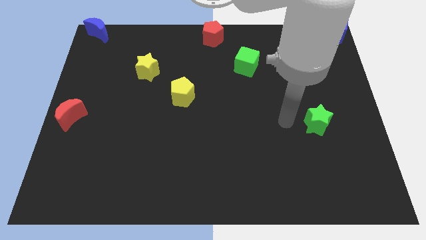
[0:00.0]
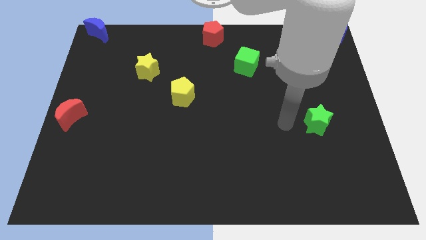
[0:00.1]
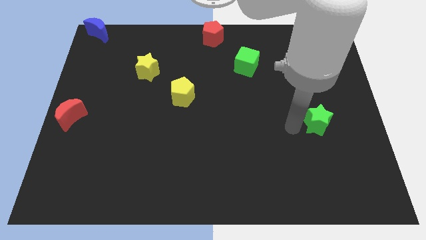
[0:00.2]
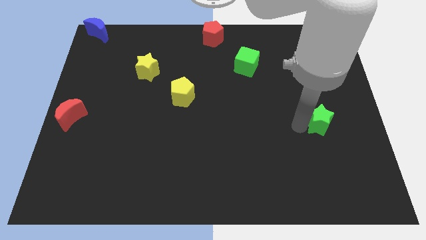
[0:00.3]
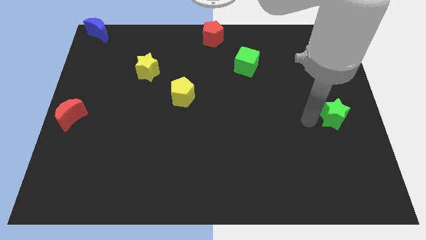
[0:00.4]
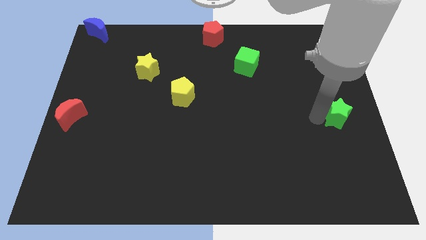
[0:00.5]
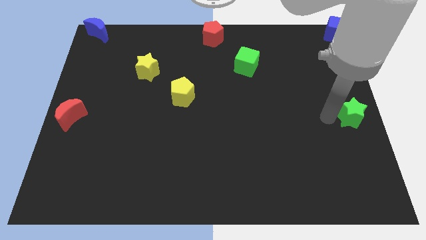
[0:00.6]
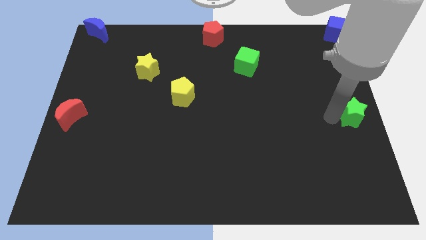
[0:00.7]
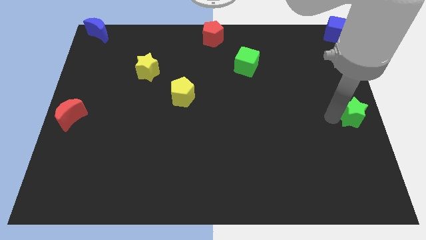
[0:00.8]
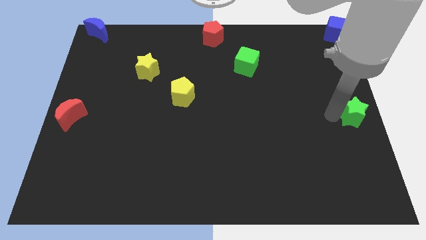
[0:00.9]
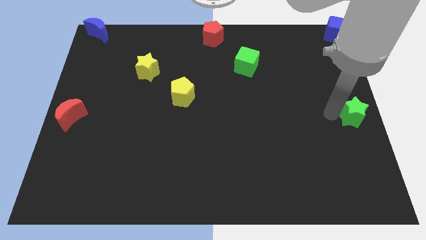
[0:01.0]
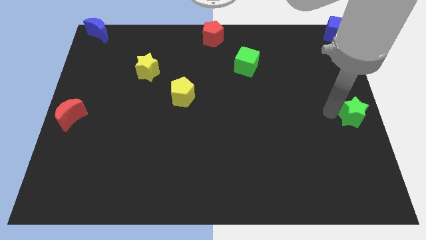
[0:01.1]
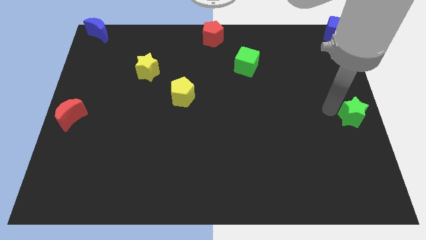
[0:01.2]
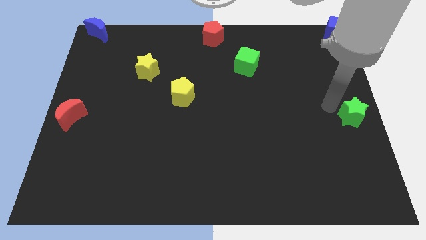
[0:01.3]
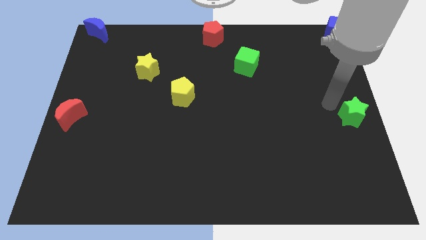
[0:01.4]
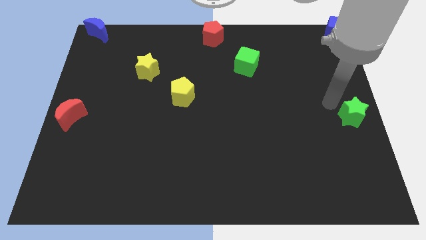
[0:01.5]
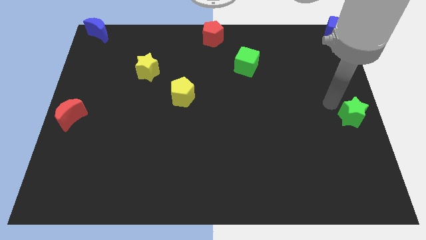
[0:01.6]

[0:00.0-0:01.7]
place the green star to the center right of the board

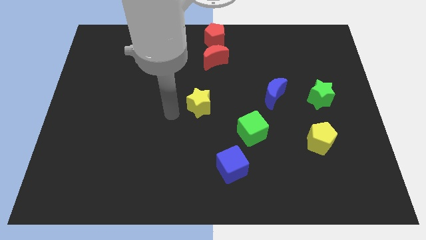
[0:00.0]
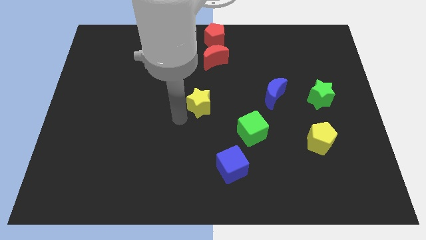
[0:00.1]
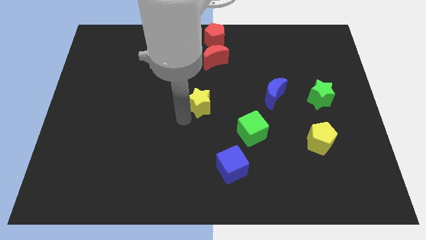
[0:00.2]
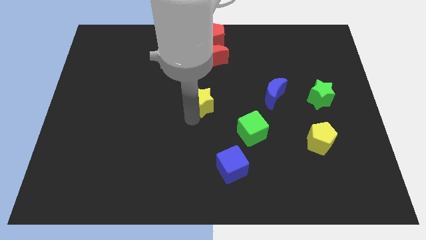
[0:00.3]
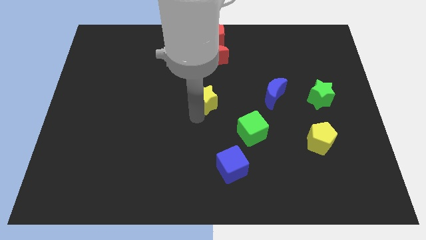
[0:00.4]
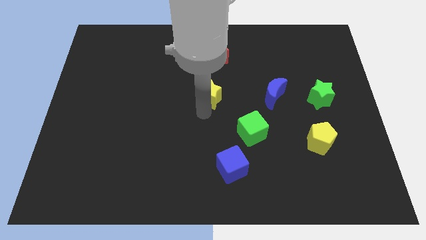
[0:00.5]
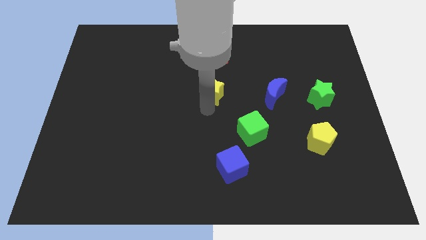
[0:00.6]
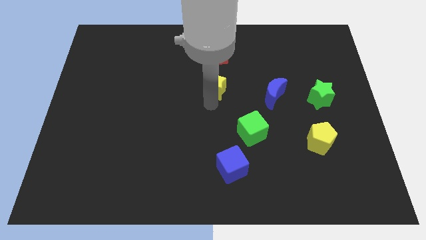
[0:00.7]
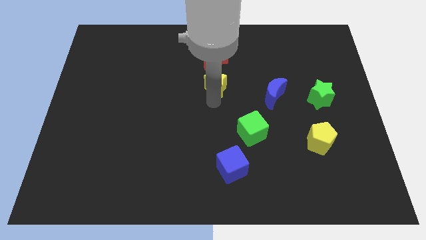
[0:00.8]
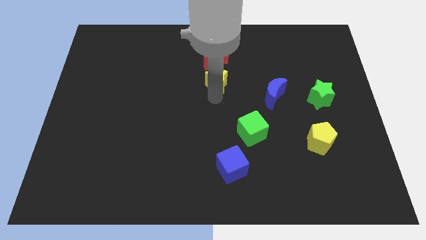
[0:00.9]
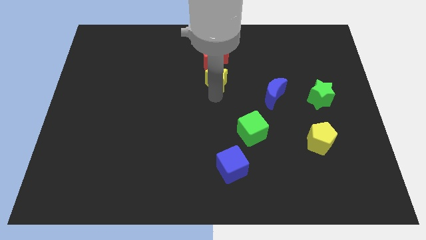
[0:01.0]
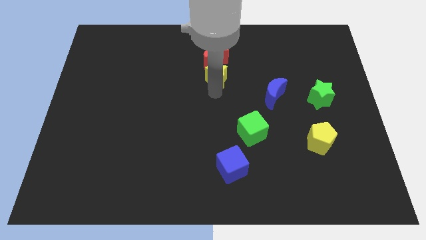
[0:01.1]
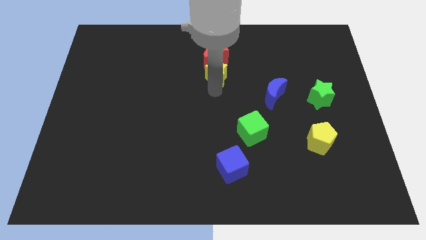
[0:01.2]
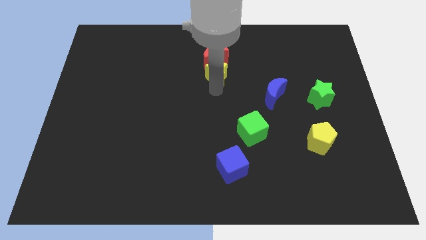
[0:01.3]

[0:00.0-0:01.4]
push the yellow star slightly towards the red crescent

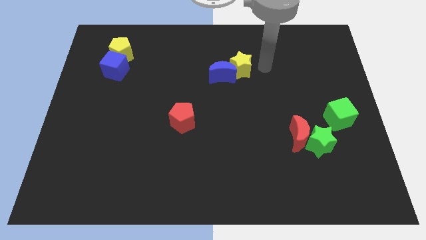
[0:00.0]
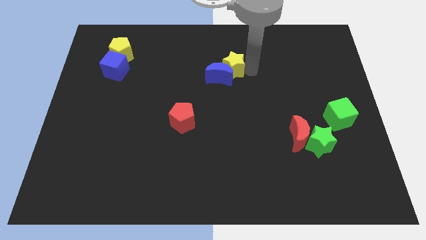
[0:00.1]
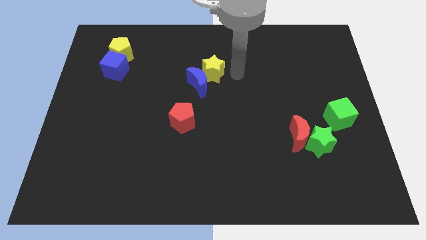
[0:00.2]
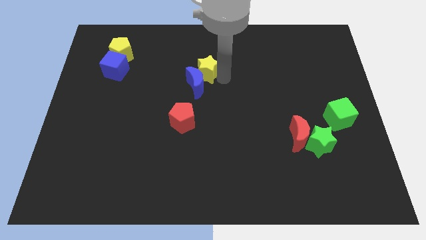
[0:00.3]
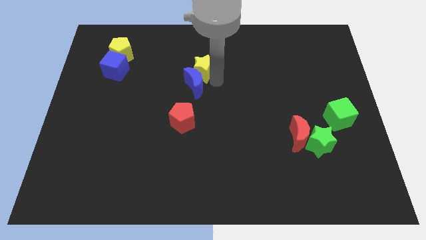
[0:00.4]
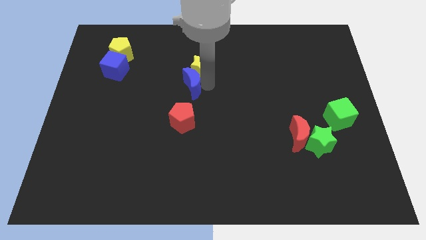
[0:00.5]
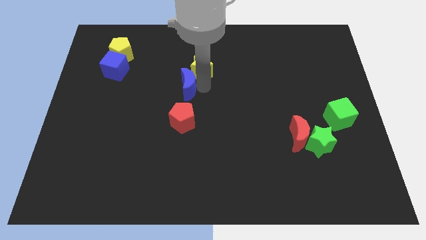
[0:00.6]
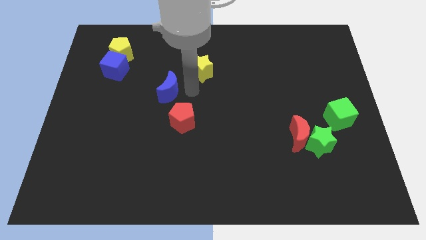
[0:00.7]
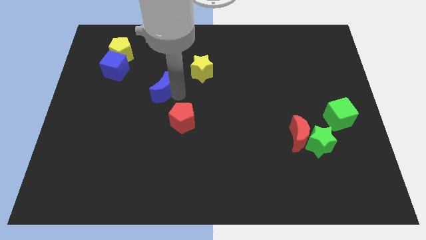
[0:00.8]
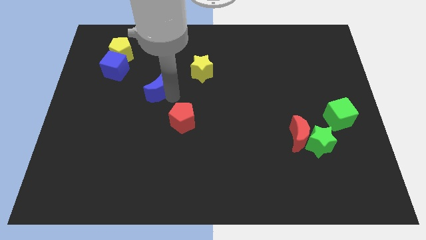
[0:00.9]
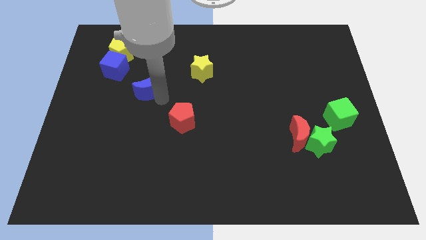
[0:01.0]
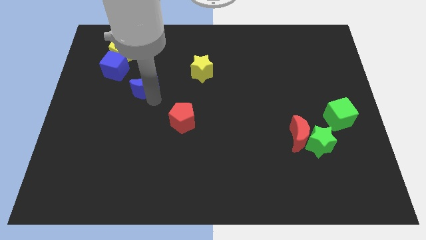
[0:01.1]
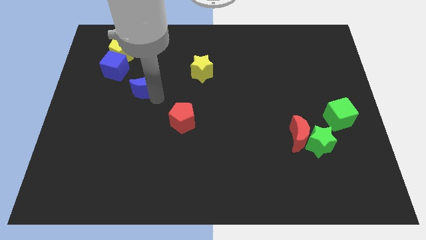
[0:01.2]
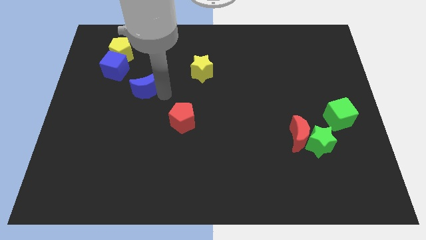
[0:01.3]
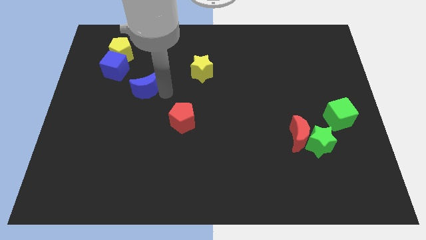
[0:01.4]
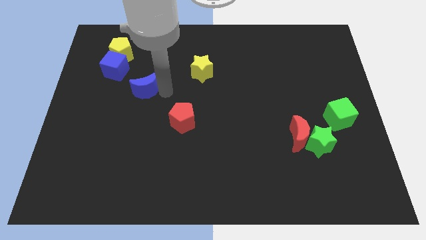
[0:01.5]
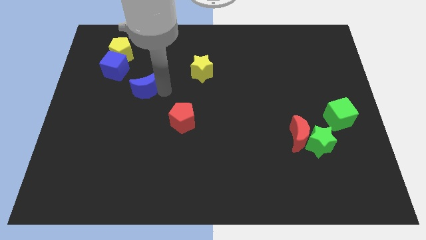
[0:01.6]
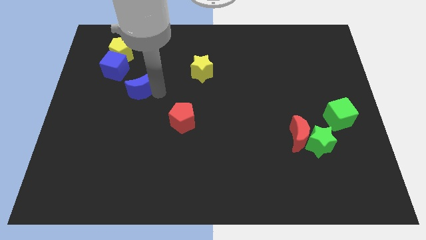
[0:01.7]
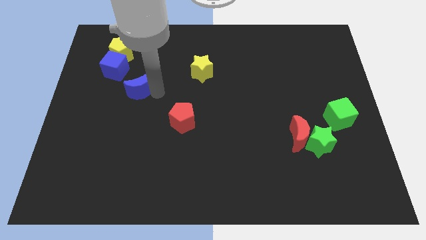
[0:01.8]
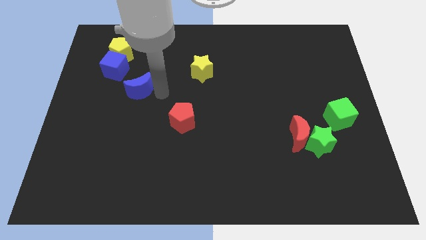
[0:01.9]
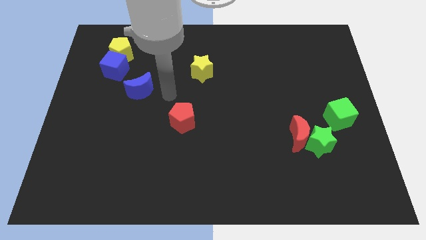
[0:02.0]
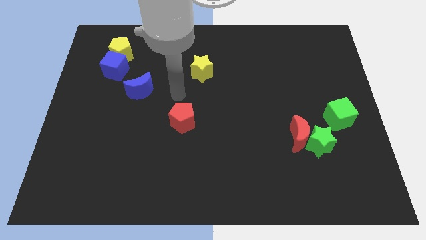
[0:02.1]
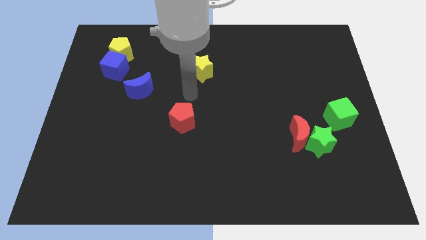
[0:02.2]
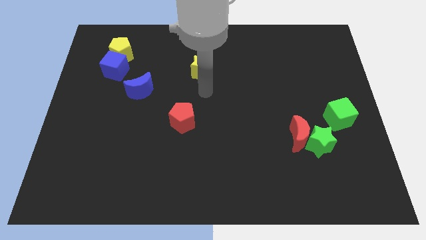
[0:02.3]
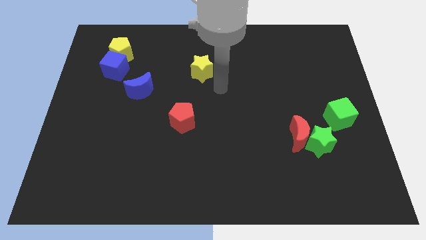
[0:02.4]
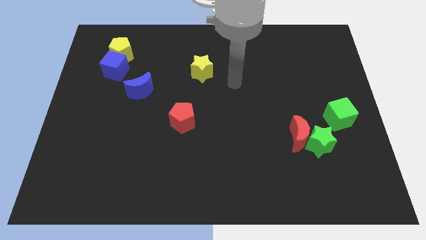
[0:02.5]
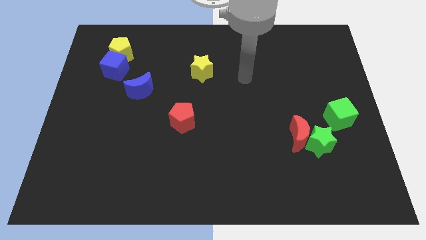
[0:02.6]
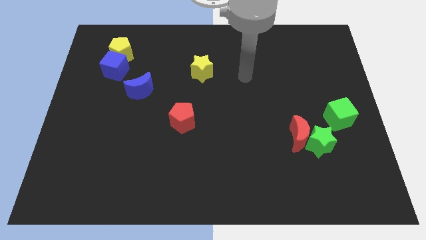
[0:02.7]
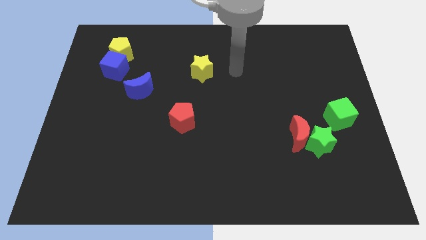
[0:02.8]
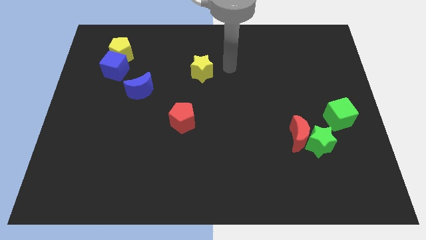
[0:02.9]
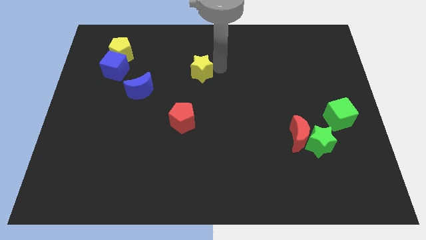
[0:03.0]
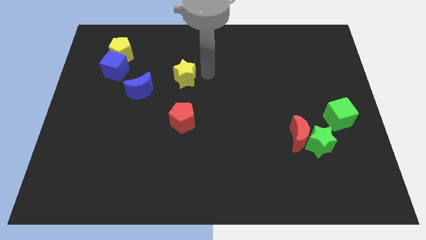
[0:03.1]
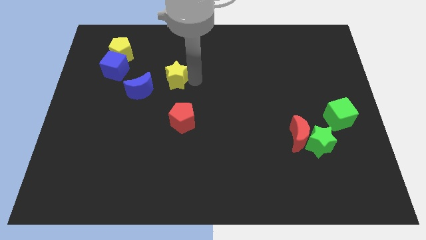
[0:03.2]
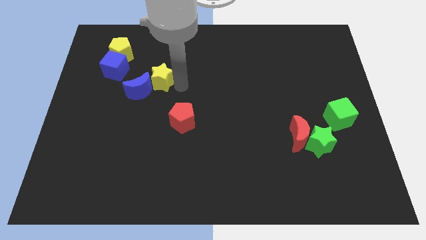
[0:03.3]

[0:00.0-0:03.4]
separate blue moon from yellow star

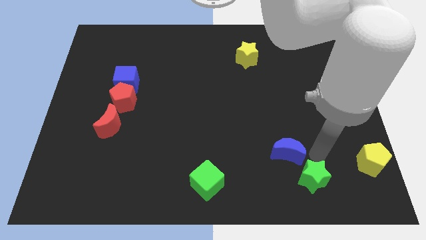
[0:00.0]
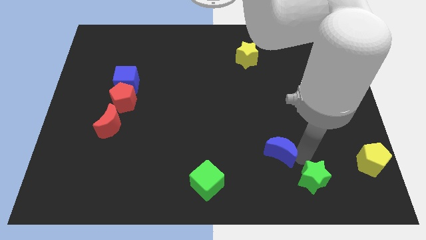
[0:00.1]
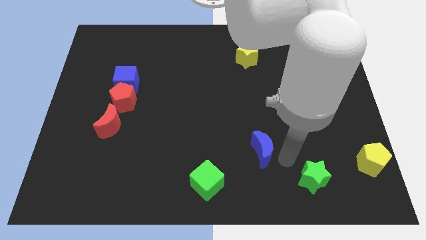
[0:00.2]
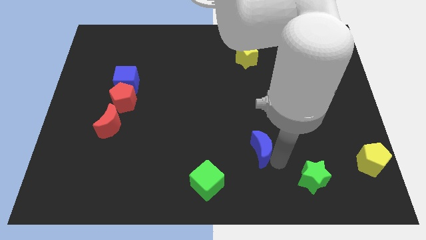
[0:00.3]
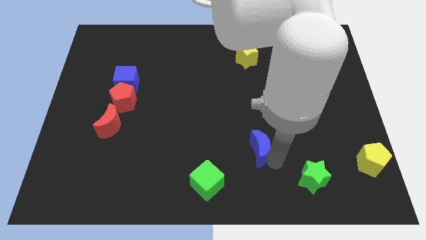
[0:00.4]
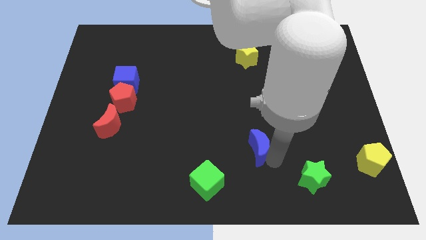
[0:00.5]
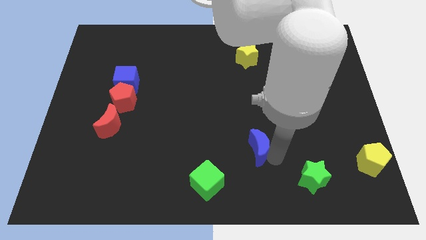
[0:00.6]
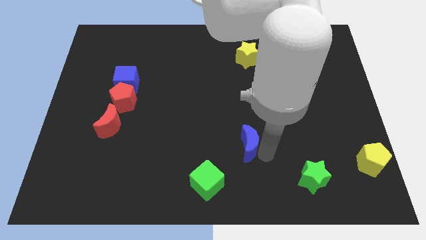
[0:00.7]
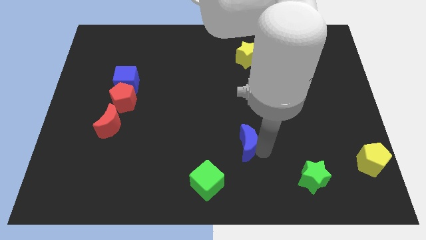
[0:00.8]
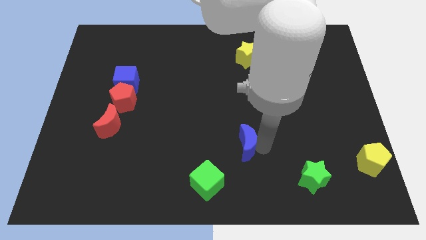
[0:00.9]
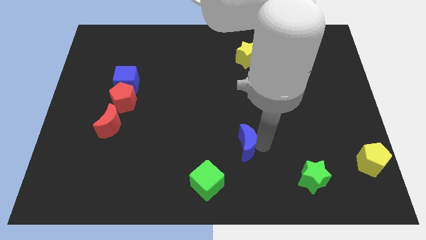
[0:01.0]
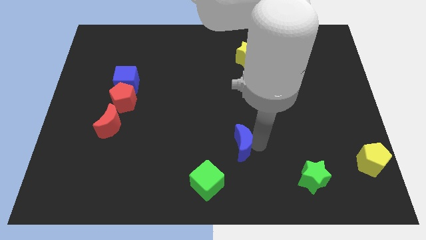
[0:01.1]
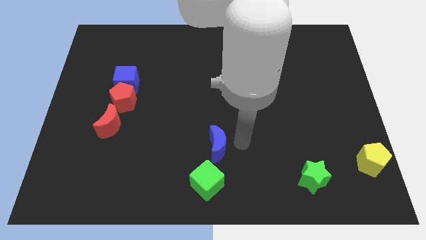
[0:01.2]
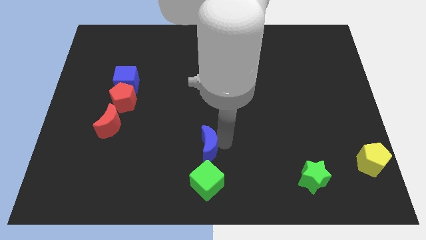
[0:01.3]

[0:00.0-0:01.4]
place the blue moon above the green cube

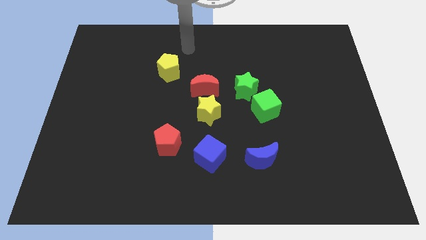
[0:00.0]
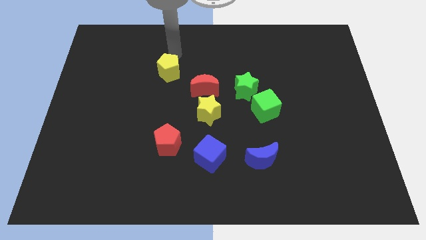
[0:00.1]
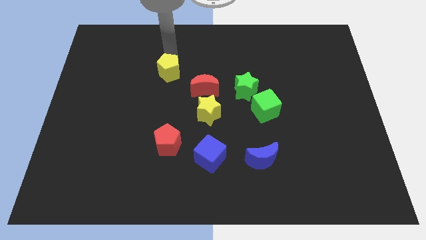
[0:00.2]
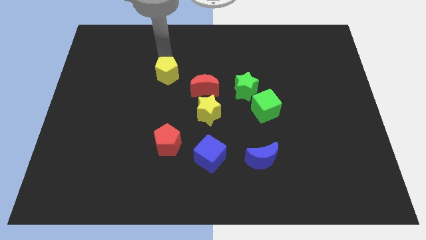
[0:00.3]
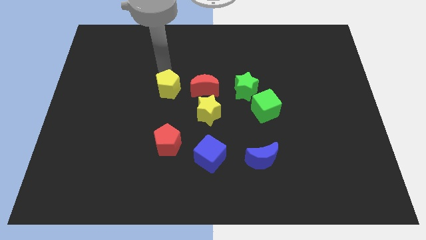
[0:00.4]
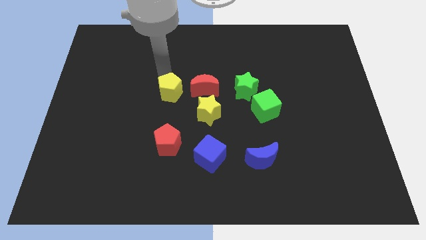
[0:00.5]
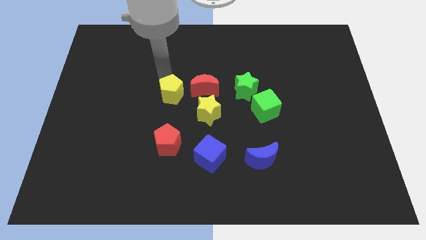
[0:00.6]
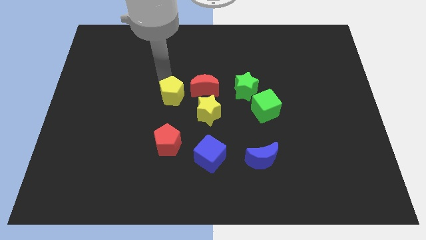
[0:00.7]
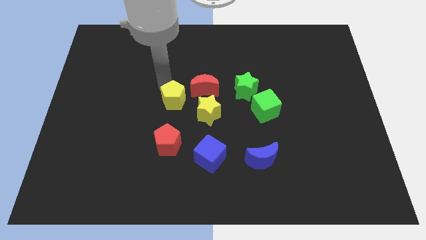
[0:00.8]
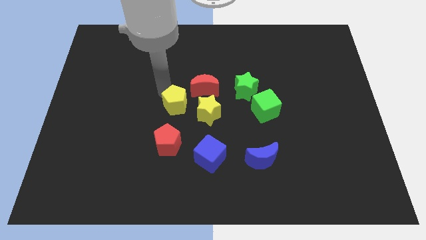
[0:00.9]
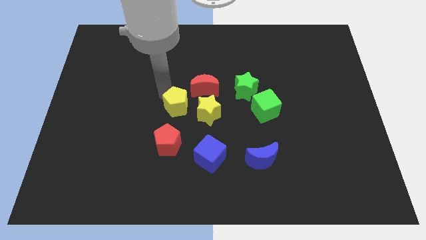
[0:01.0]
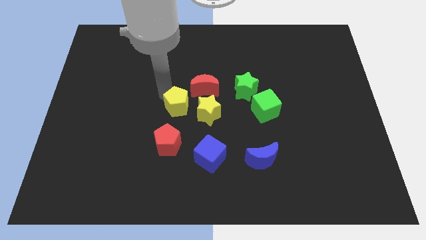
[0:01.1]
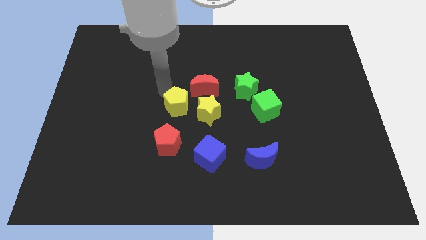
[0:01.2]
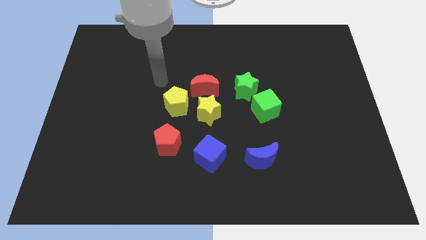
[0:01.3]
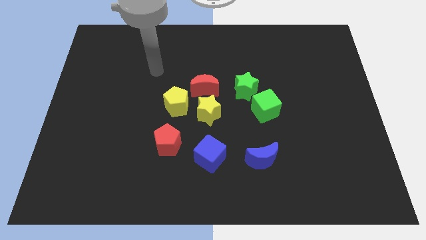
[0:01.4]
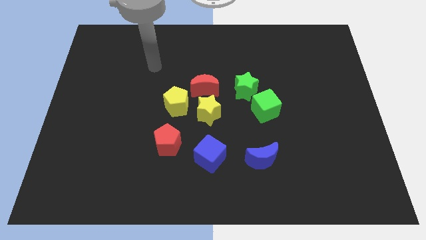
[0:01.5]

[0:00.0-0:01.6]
move the yellow pentagon to the left of the yellow star
